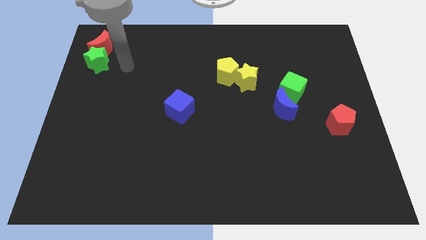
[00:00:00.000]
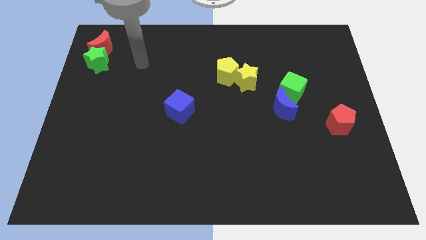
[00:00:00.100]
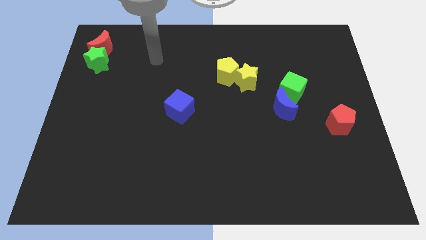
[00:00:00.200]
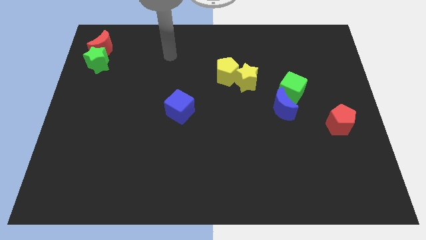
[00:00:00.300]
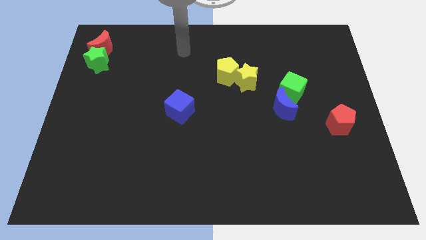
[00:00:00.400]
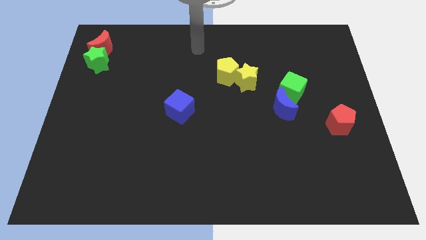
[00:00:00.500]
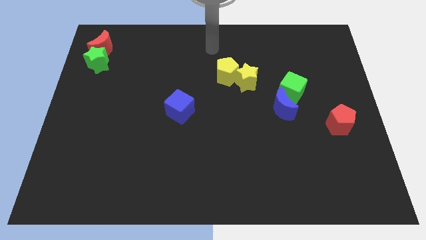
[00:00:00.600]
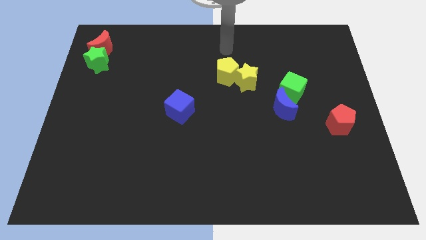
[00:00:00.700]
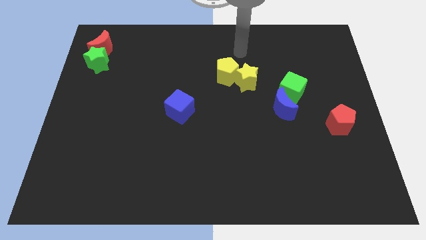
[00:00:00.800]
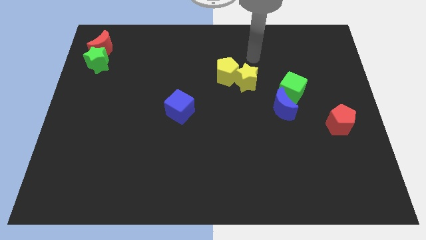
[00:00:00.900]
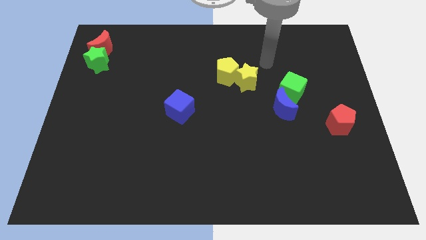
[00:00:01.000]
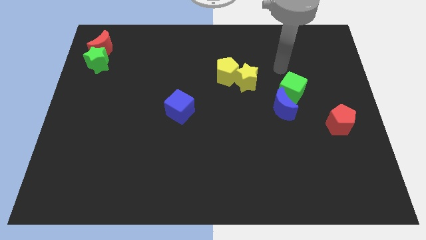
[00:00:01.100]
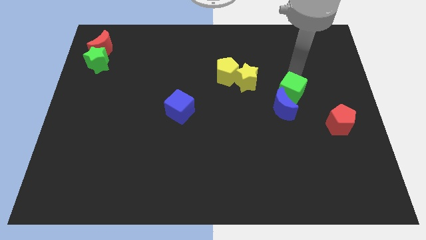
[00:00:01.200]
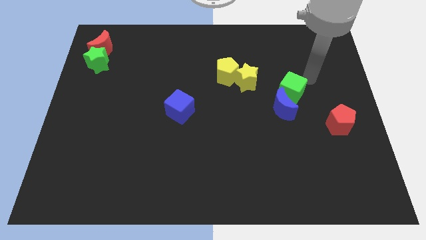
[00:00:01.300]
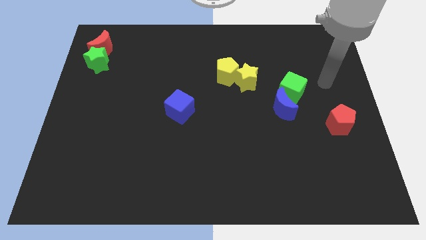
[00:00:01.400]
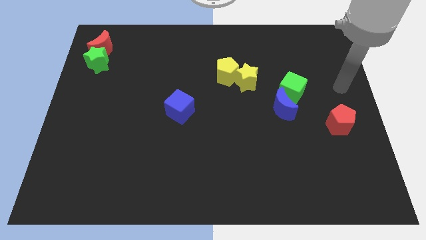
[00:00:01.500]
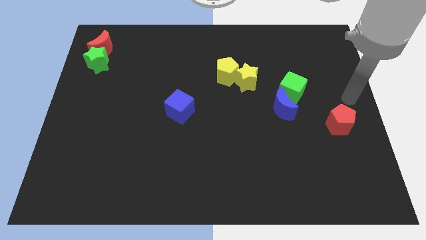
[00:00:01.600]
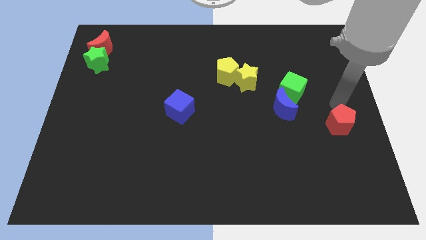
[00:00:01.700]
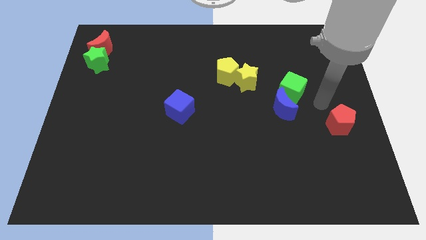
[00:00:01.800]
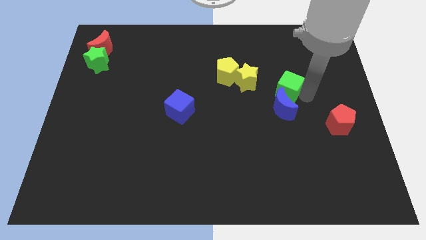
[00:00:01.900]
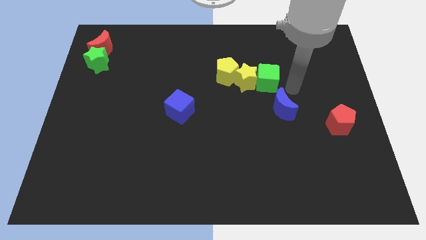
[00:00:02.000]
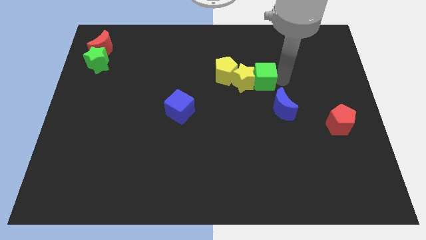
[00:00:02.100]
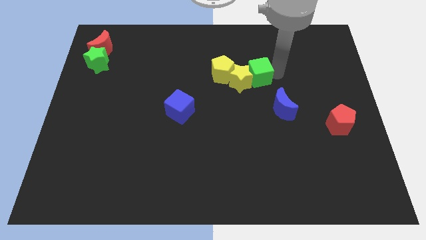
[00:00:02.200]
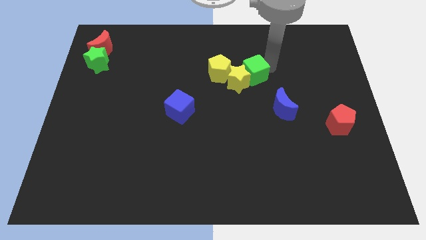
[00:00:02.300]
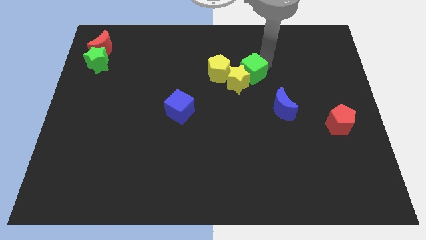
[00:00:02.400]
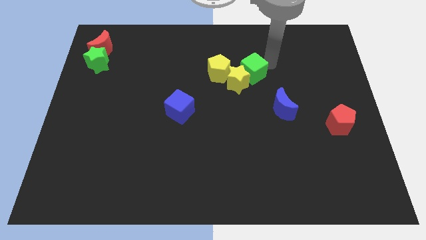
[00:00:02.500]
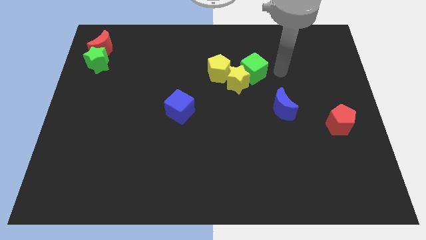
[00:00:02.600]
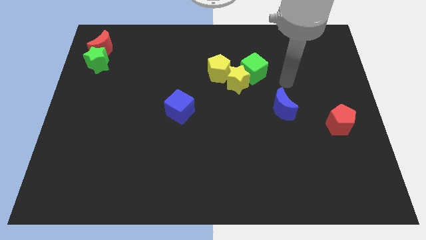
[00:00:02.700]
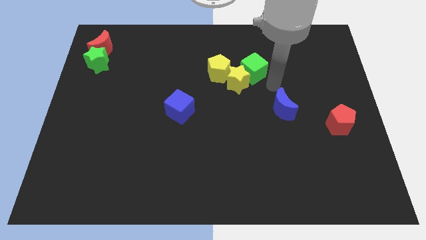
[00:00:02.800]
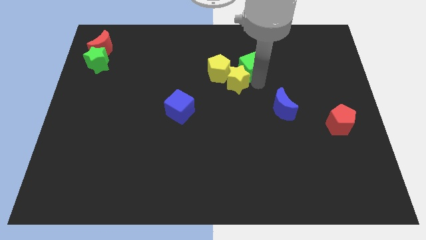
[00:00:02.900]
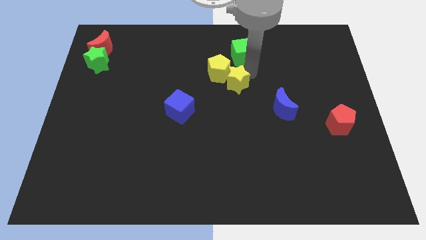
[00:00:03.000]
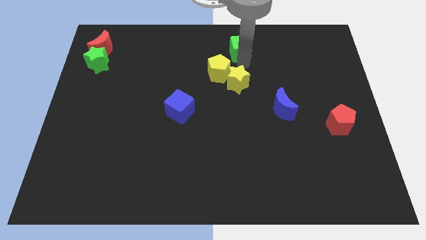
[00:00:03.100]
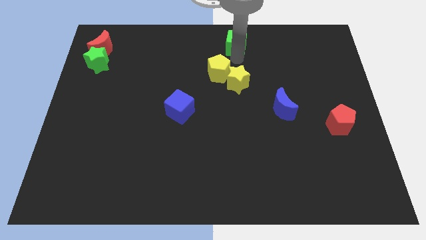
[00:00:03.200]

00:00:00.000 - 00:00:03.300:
move the green cube on top of yellow pentagon

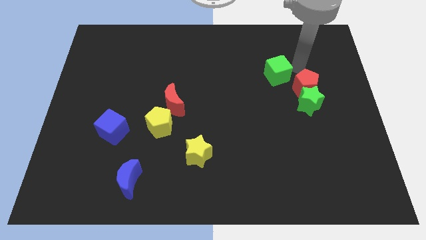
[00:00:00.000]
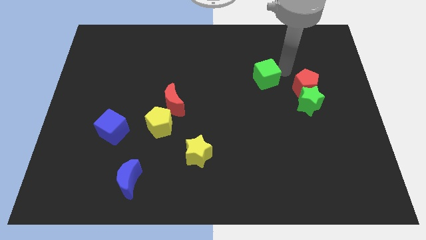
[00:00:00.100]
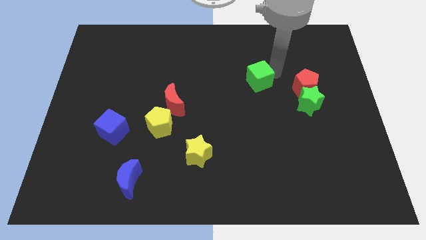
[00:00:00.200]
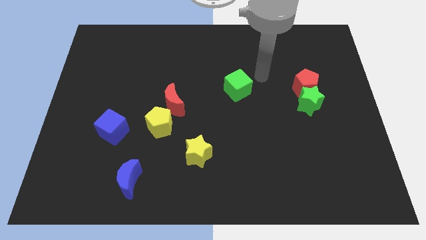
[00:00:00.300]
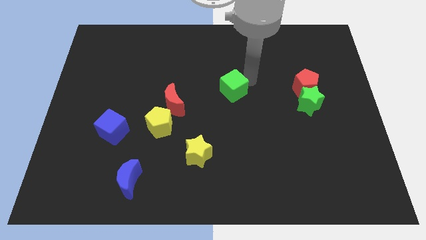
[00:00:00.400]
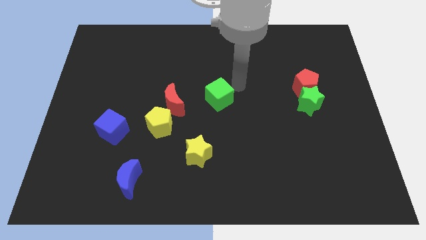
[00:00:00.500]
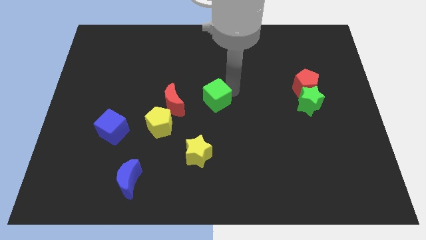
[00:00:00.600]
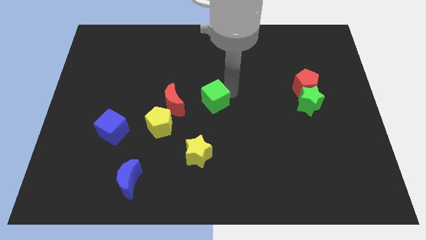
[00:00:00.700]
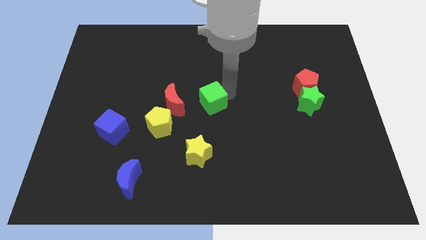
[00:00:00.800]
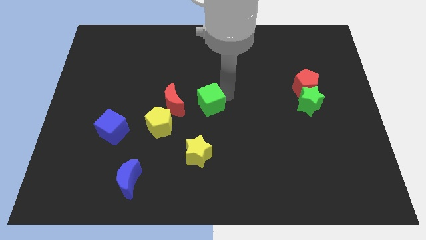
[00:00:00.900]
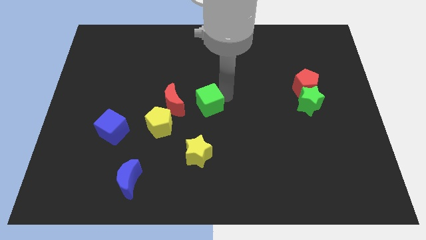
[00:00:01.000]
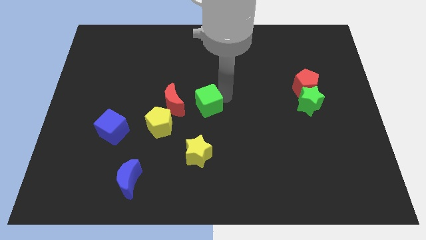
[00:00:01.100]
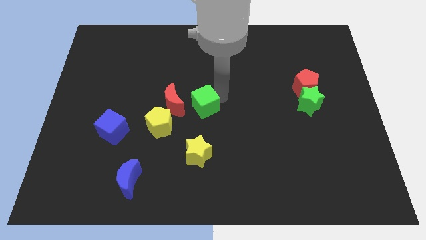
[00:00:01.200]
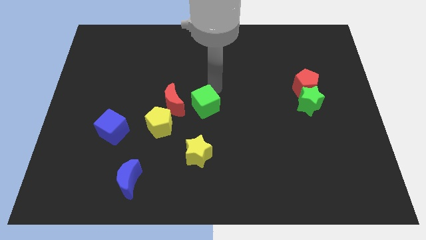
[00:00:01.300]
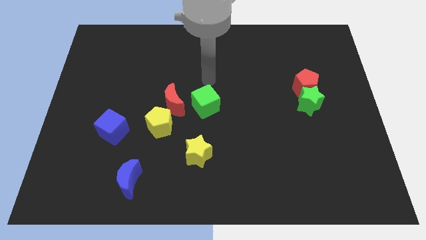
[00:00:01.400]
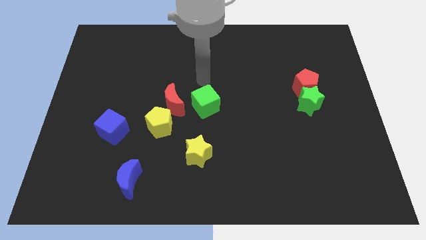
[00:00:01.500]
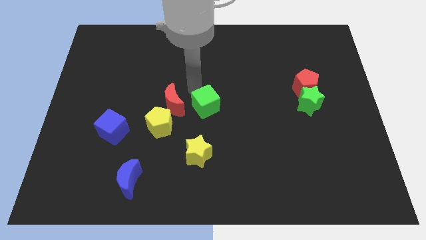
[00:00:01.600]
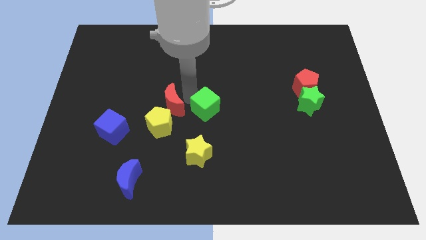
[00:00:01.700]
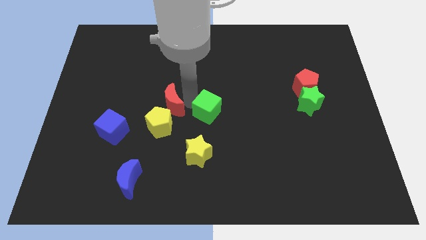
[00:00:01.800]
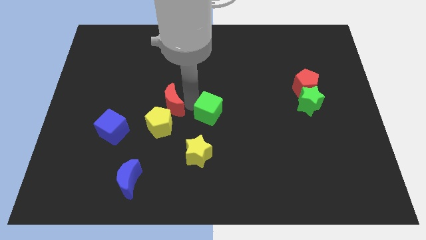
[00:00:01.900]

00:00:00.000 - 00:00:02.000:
move green cube near red moon

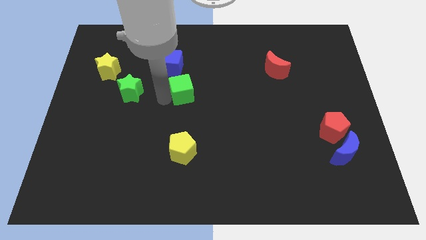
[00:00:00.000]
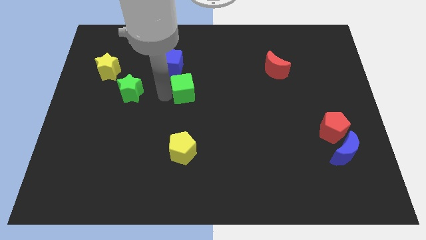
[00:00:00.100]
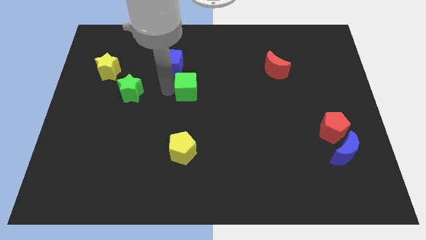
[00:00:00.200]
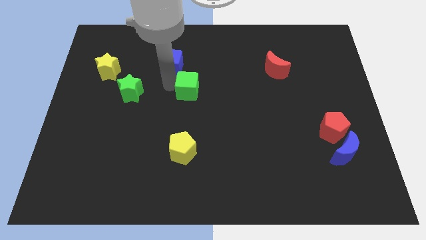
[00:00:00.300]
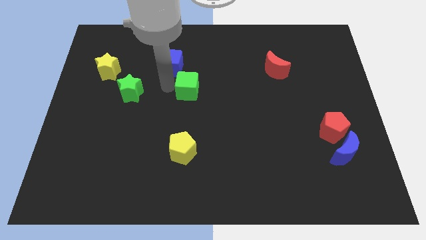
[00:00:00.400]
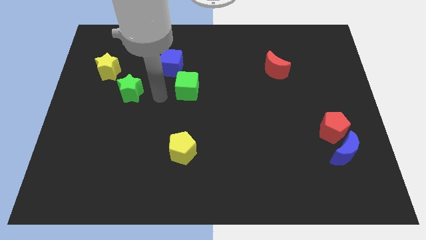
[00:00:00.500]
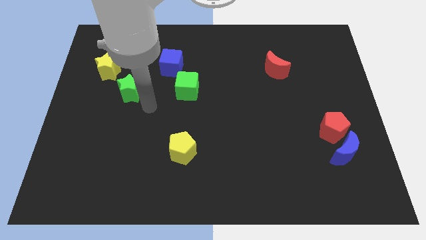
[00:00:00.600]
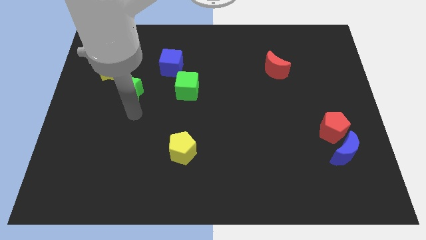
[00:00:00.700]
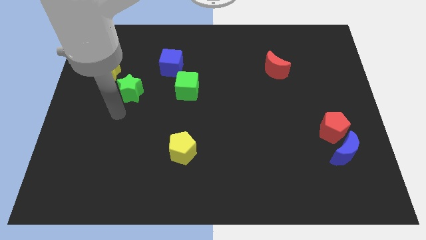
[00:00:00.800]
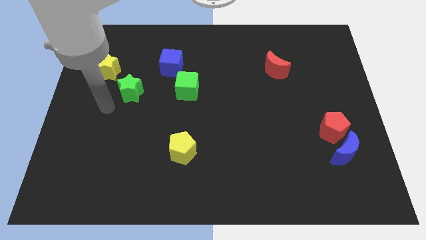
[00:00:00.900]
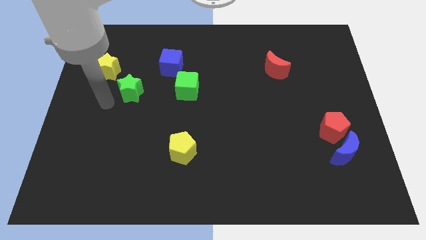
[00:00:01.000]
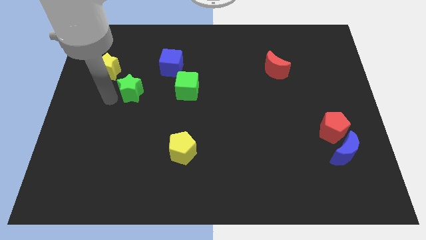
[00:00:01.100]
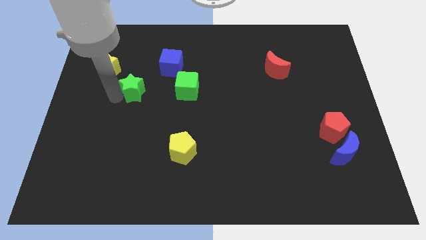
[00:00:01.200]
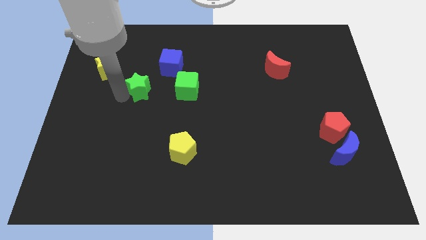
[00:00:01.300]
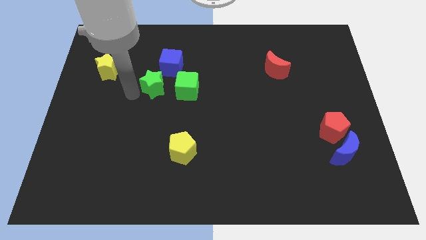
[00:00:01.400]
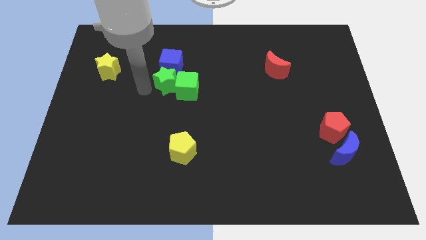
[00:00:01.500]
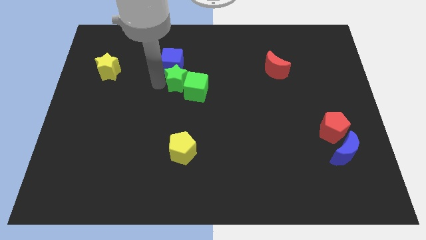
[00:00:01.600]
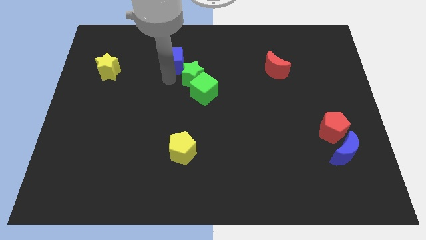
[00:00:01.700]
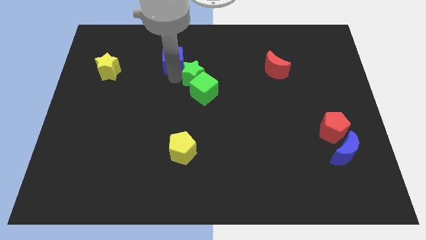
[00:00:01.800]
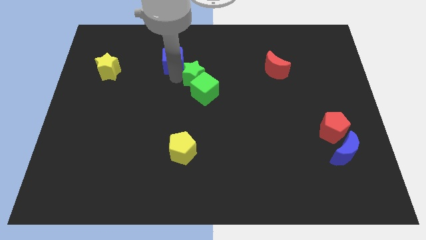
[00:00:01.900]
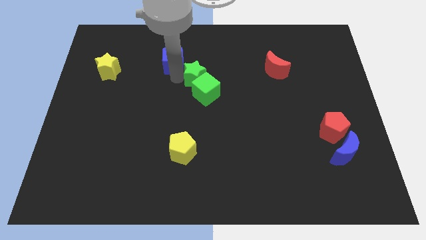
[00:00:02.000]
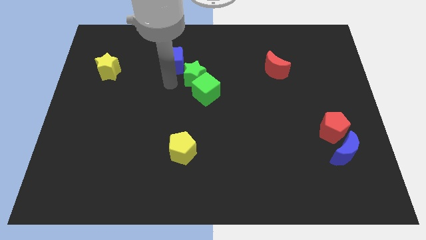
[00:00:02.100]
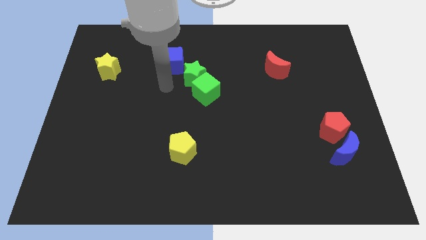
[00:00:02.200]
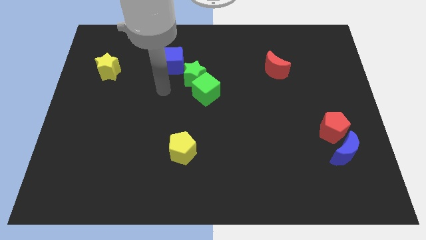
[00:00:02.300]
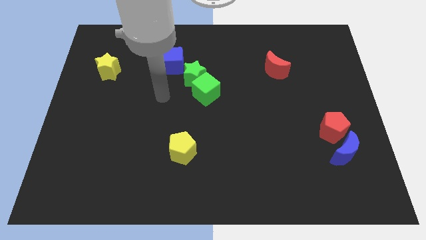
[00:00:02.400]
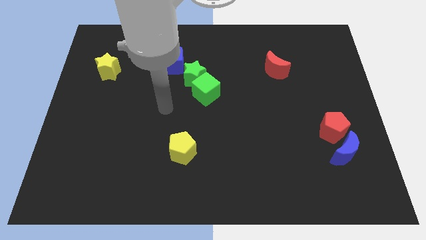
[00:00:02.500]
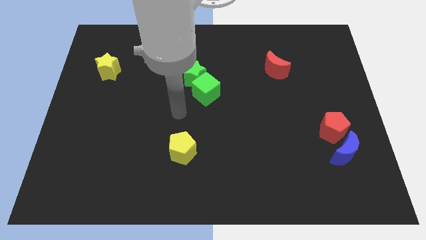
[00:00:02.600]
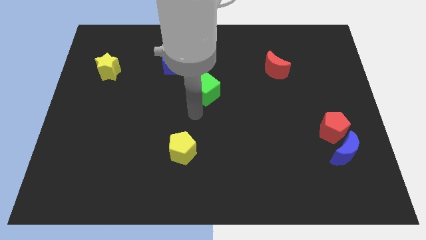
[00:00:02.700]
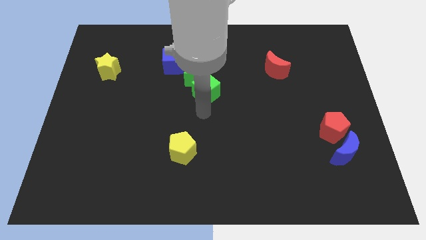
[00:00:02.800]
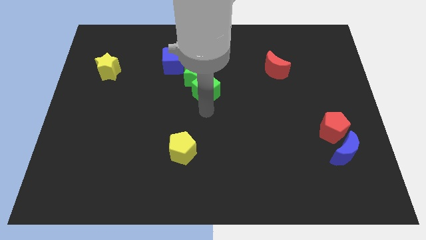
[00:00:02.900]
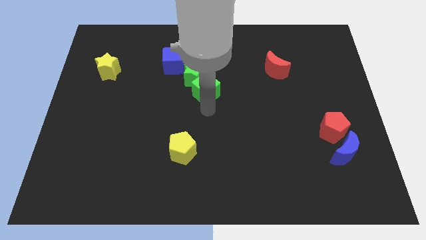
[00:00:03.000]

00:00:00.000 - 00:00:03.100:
push the green star into the green cube

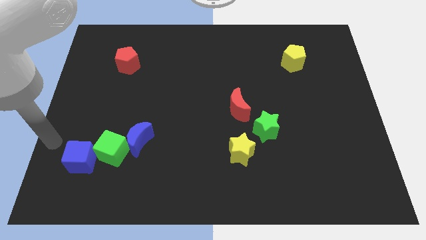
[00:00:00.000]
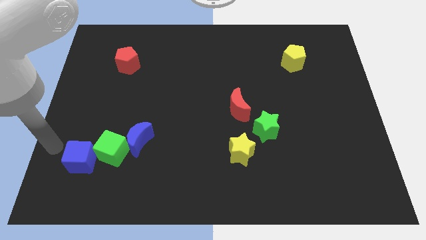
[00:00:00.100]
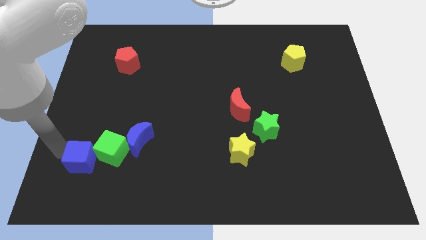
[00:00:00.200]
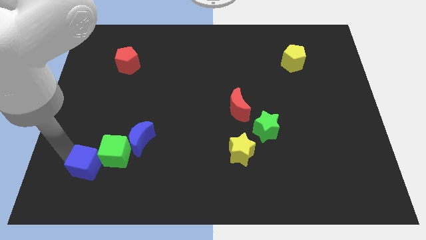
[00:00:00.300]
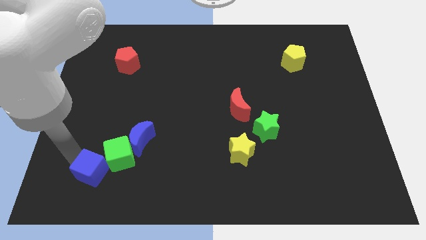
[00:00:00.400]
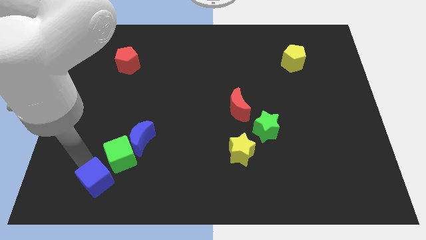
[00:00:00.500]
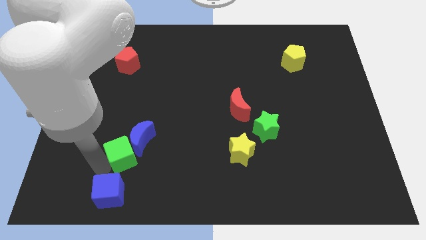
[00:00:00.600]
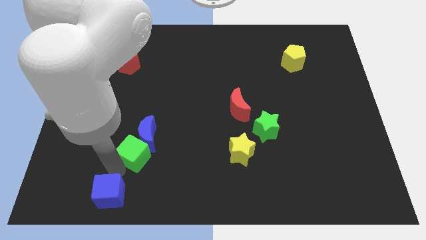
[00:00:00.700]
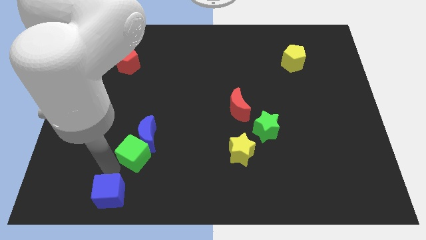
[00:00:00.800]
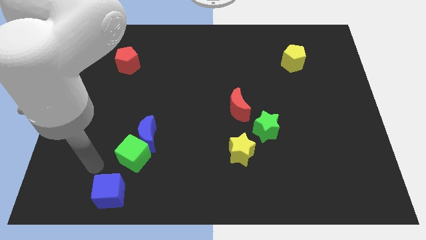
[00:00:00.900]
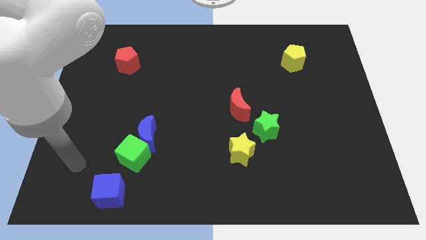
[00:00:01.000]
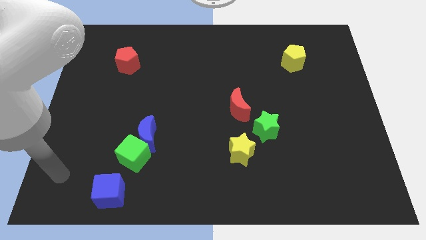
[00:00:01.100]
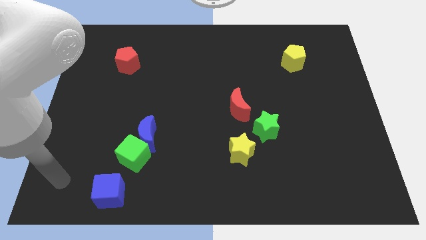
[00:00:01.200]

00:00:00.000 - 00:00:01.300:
move the blue cube to the bottom right of the green cube
